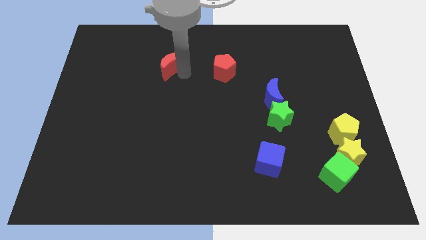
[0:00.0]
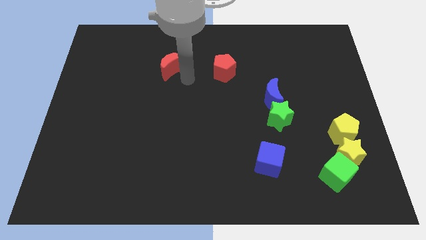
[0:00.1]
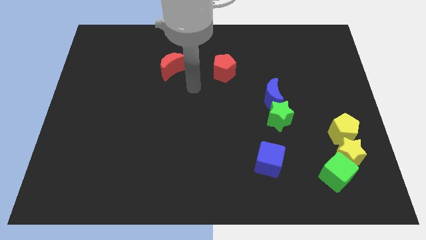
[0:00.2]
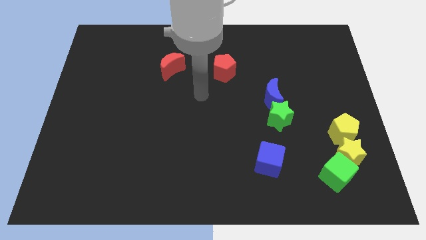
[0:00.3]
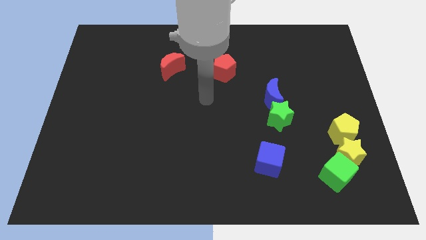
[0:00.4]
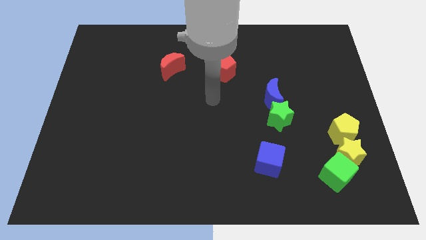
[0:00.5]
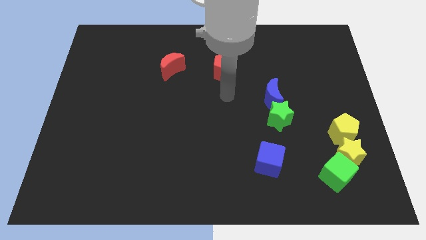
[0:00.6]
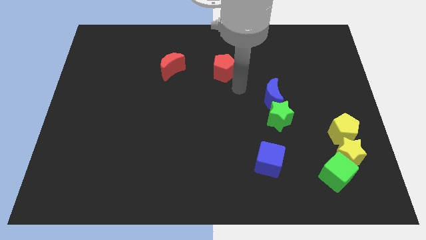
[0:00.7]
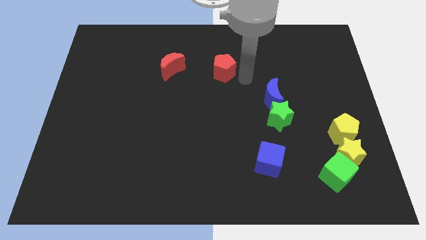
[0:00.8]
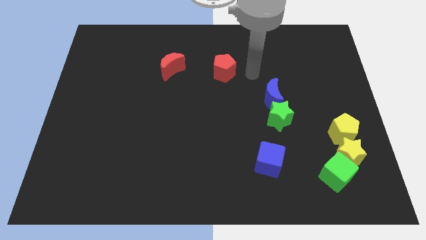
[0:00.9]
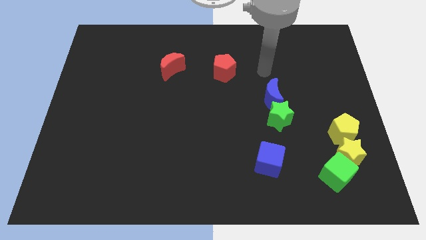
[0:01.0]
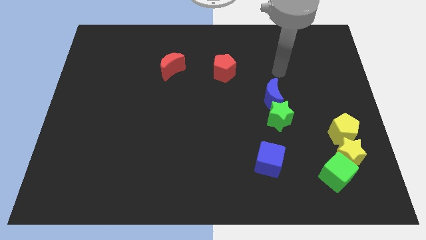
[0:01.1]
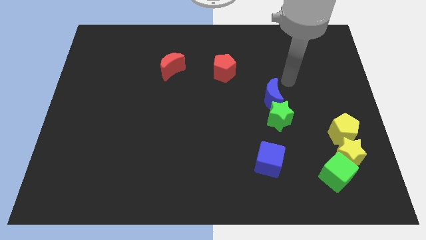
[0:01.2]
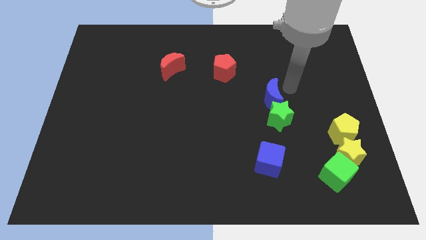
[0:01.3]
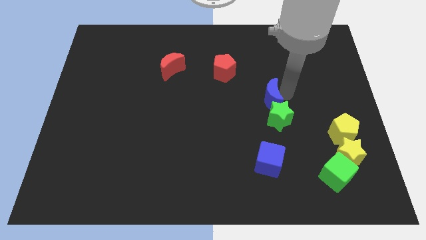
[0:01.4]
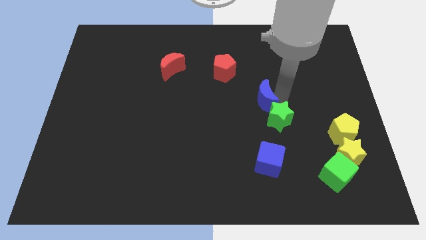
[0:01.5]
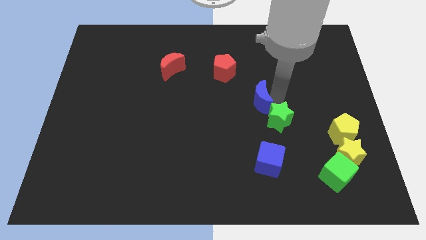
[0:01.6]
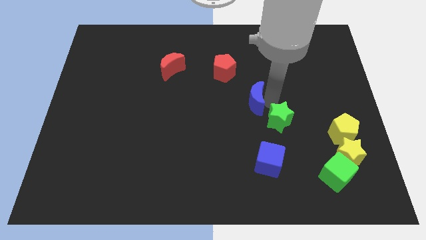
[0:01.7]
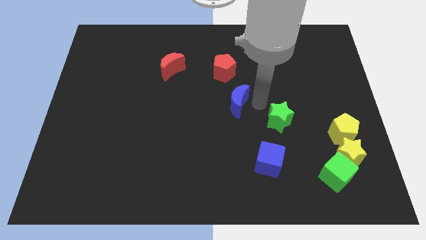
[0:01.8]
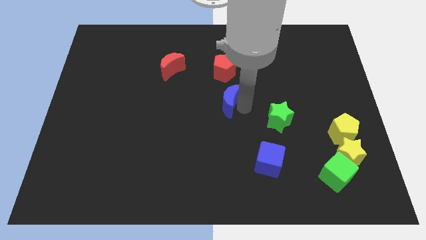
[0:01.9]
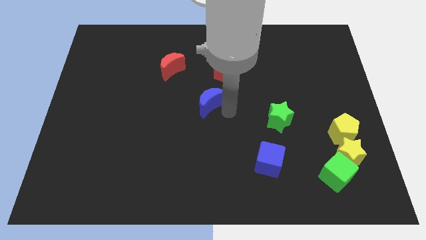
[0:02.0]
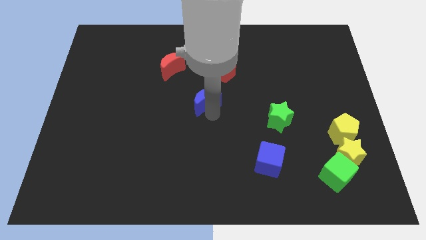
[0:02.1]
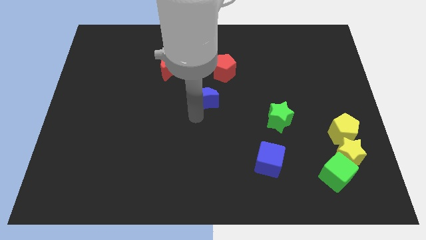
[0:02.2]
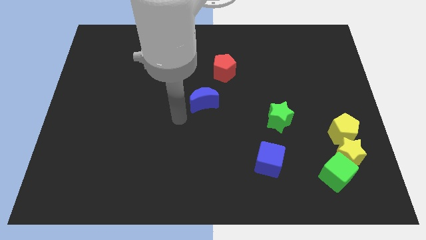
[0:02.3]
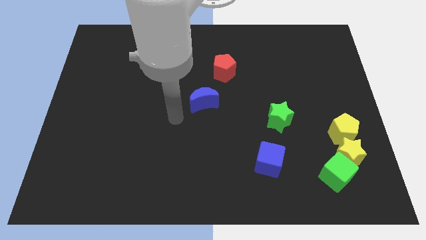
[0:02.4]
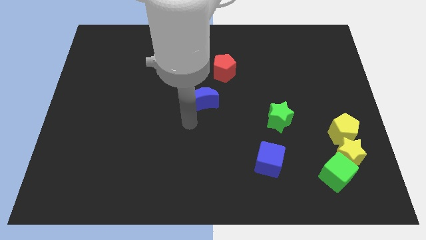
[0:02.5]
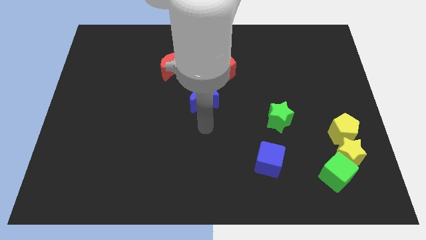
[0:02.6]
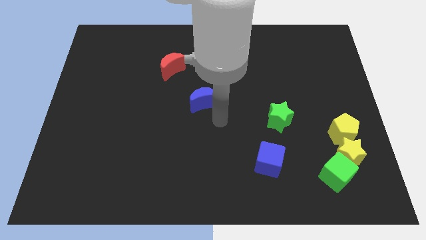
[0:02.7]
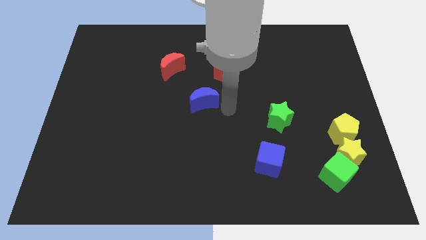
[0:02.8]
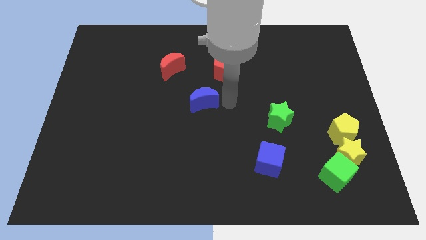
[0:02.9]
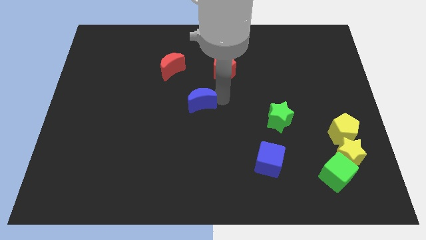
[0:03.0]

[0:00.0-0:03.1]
push the blue moon to the center of the board

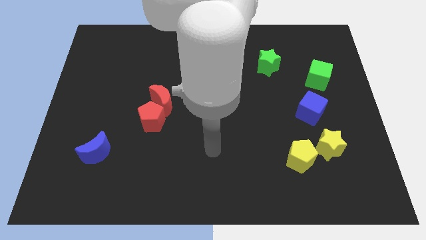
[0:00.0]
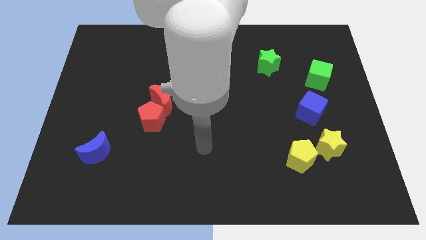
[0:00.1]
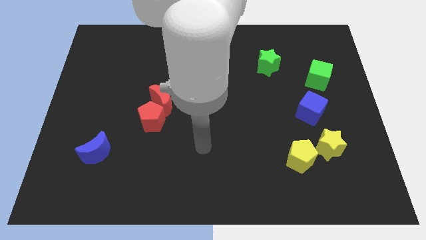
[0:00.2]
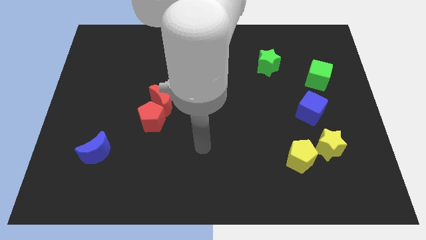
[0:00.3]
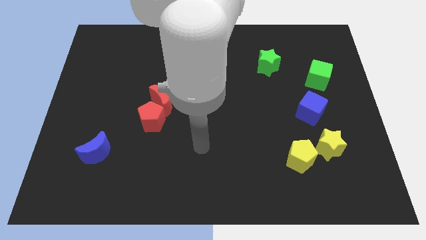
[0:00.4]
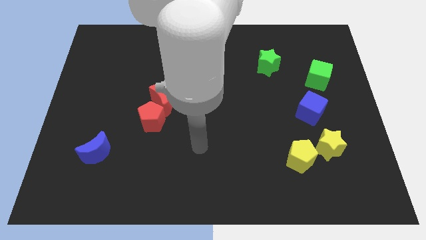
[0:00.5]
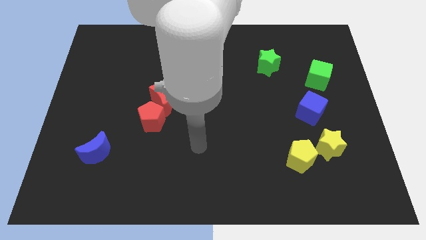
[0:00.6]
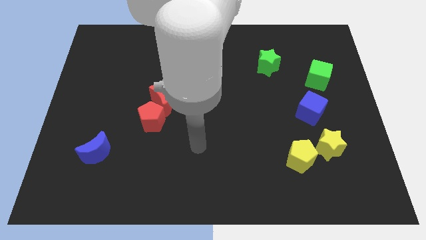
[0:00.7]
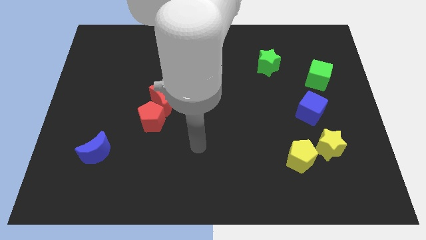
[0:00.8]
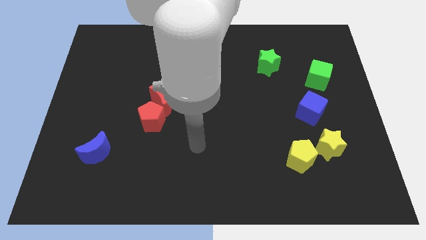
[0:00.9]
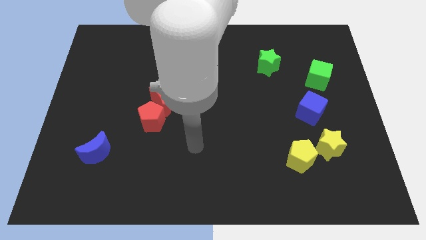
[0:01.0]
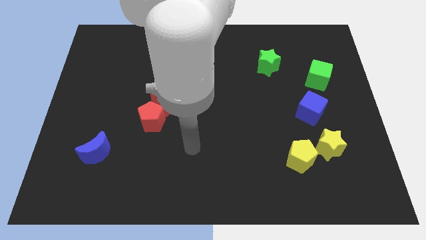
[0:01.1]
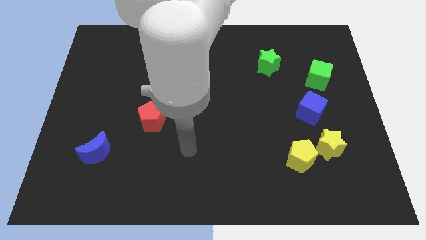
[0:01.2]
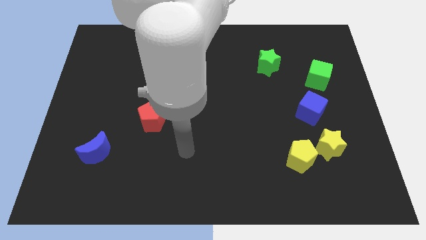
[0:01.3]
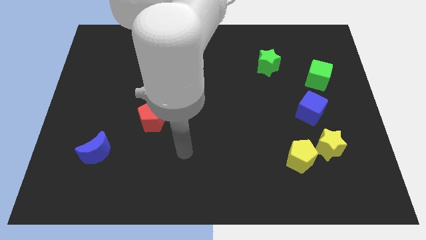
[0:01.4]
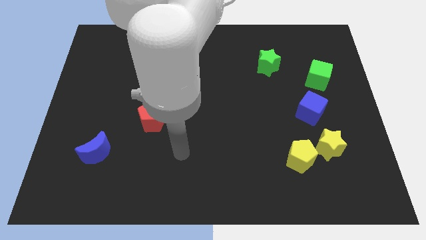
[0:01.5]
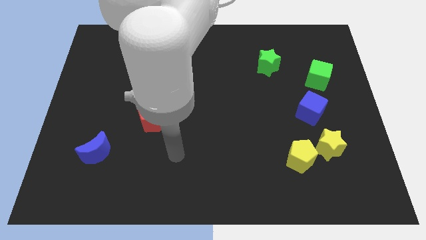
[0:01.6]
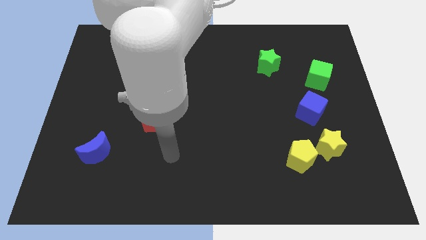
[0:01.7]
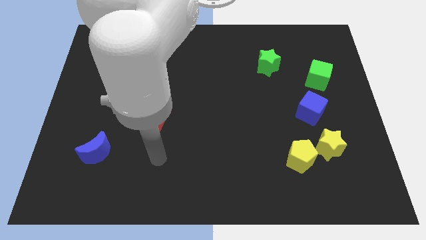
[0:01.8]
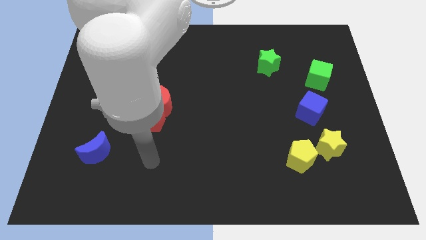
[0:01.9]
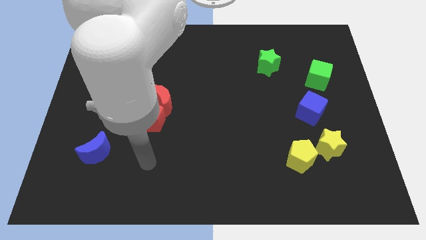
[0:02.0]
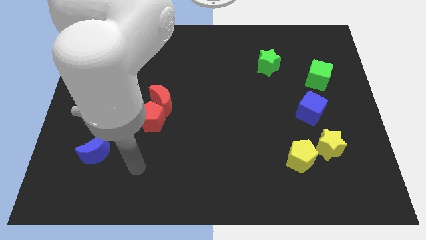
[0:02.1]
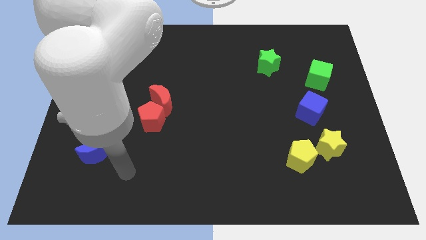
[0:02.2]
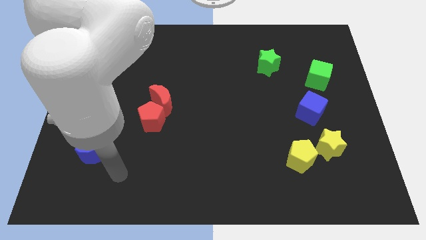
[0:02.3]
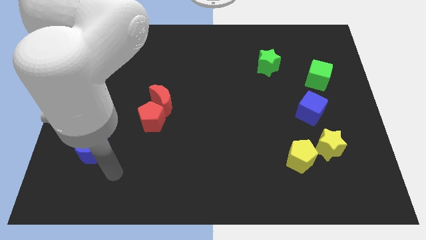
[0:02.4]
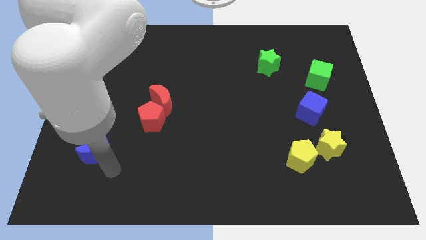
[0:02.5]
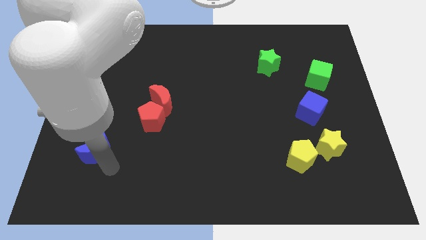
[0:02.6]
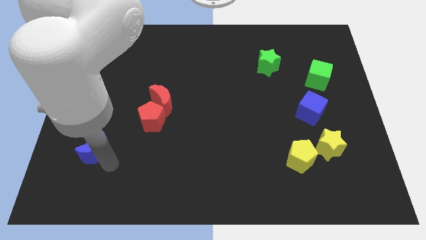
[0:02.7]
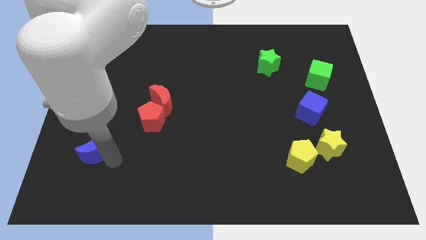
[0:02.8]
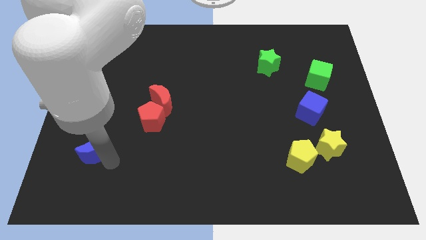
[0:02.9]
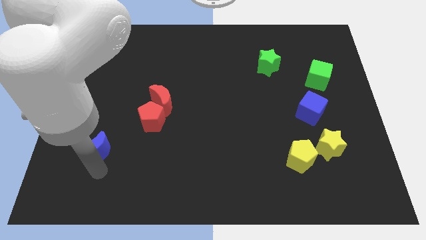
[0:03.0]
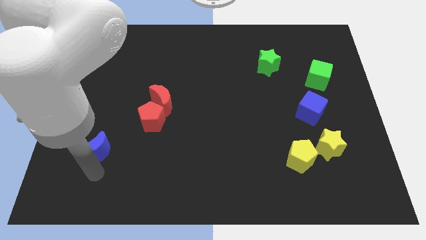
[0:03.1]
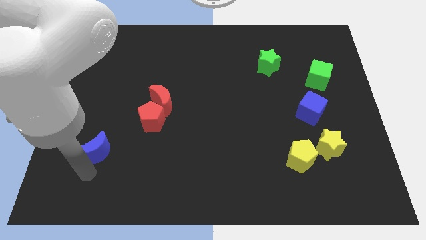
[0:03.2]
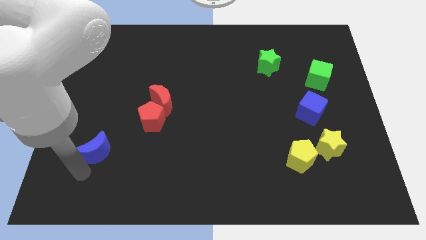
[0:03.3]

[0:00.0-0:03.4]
move the arm to the blue moon

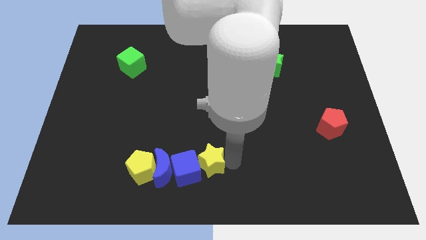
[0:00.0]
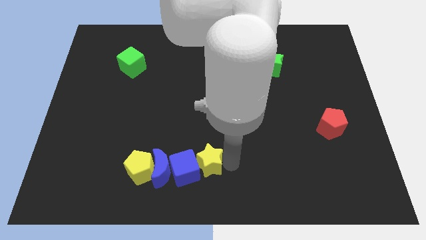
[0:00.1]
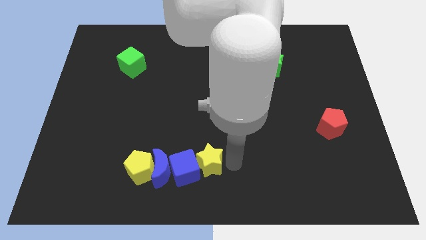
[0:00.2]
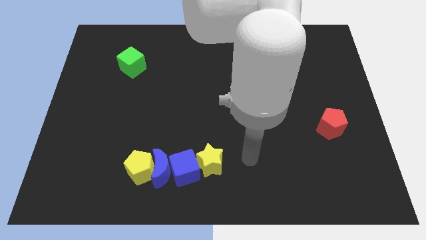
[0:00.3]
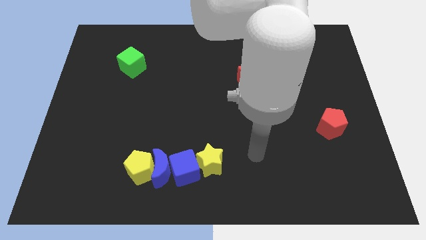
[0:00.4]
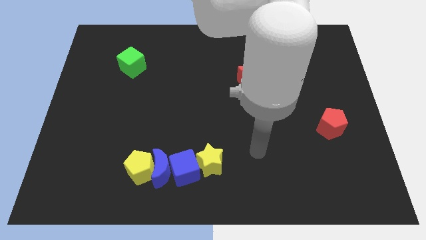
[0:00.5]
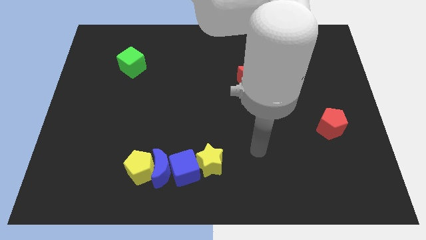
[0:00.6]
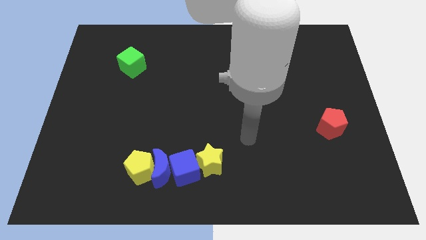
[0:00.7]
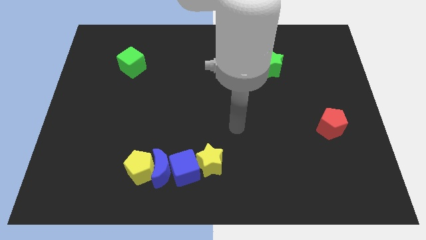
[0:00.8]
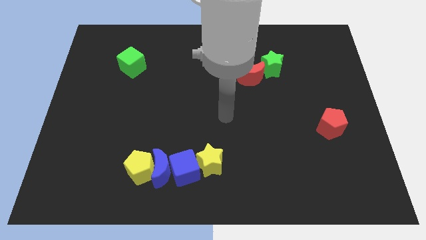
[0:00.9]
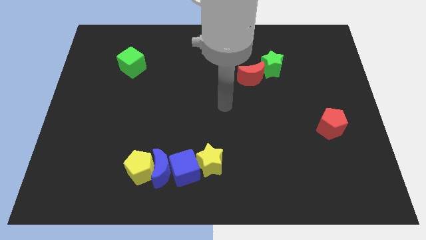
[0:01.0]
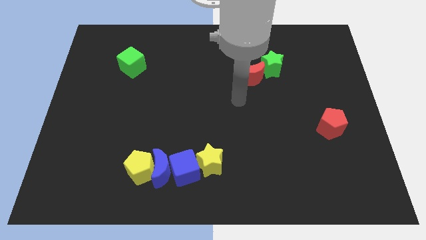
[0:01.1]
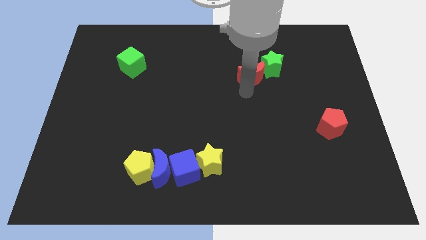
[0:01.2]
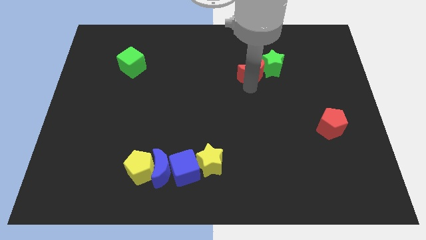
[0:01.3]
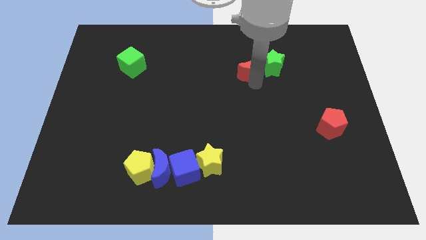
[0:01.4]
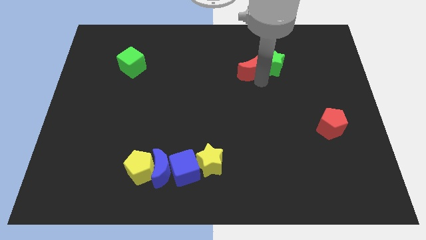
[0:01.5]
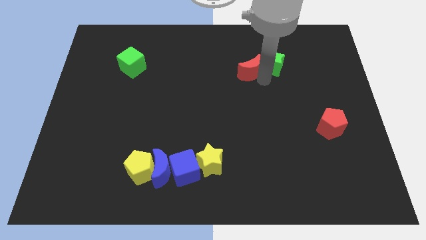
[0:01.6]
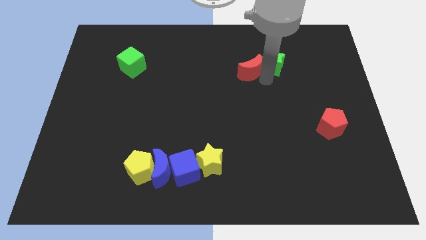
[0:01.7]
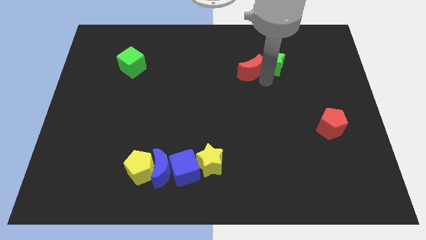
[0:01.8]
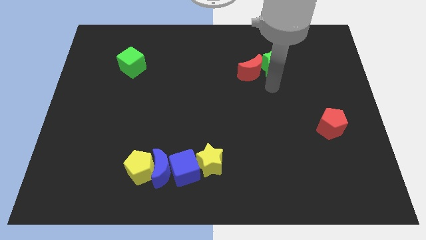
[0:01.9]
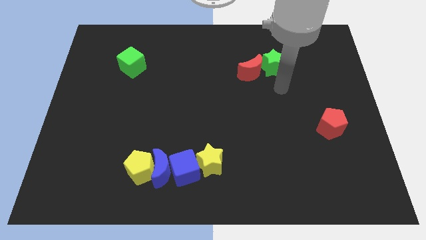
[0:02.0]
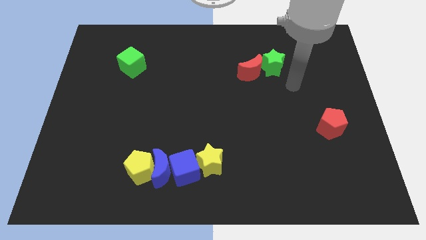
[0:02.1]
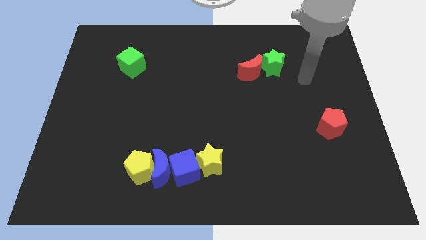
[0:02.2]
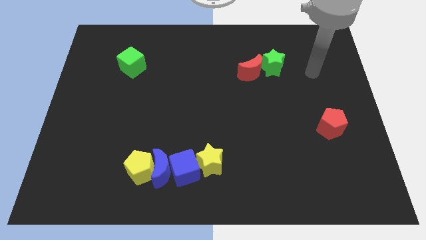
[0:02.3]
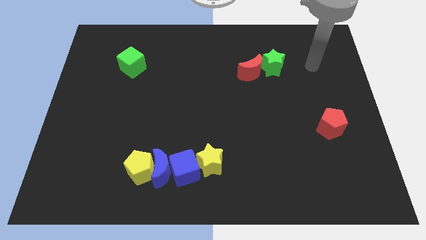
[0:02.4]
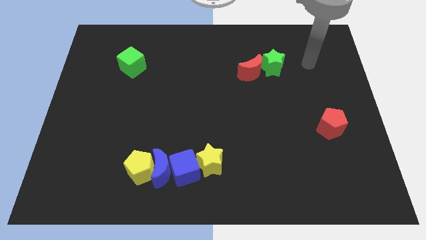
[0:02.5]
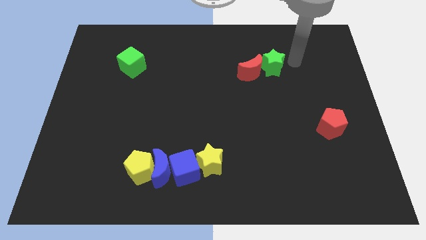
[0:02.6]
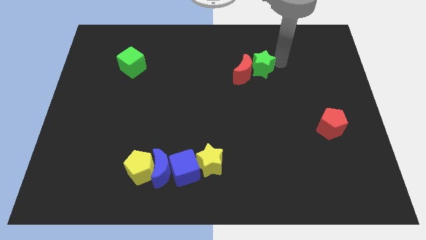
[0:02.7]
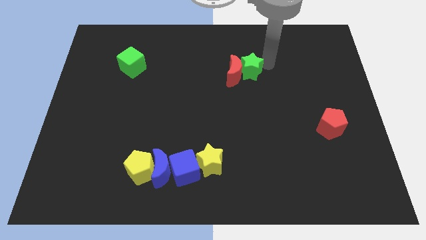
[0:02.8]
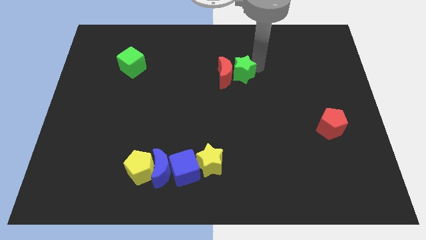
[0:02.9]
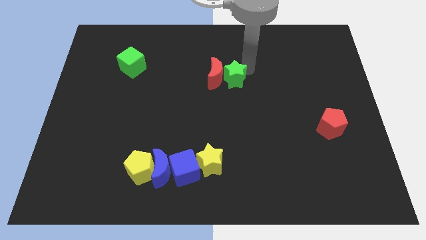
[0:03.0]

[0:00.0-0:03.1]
move green star close to the red moon
